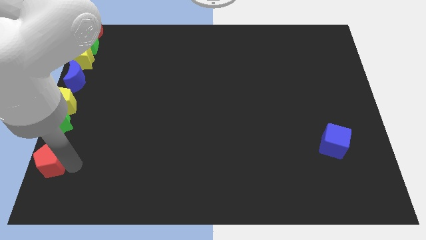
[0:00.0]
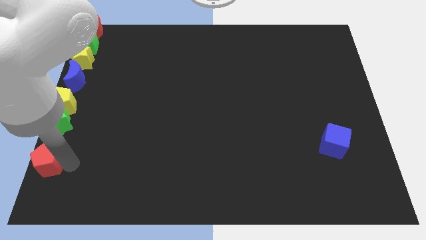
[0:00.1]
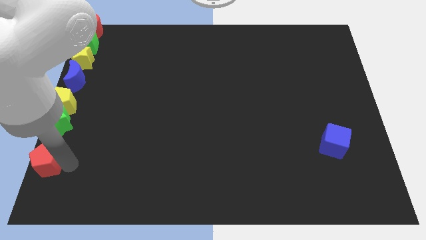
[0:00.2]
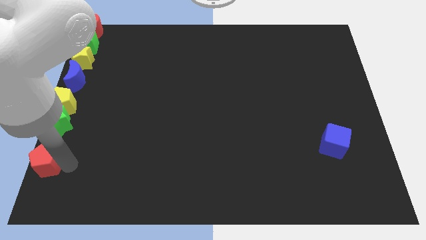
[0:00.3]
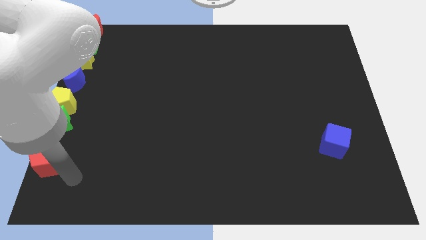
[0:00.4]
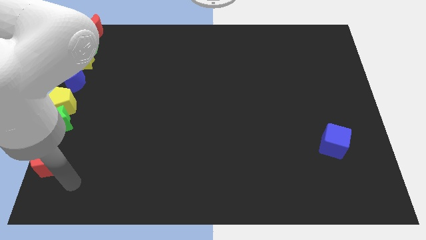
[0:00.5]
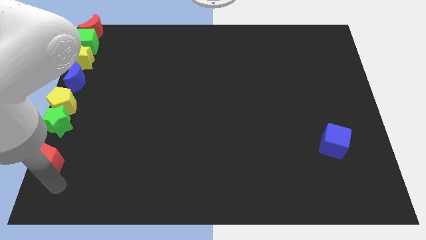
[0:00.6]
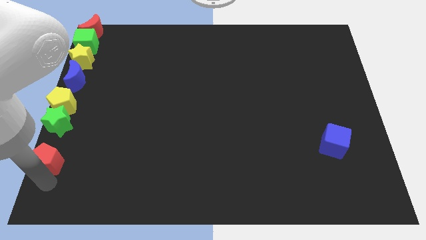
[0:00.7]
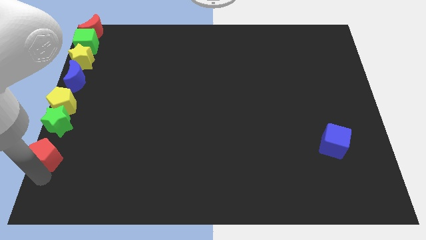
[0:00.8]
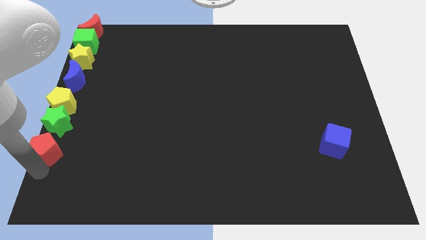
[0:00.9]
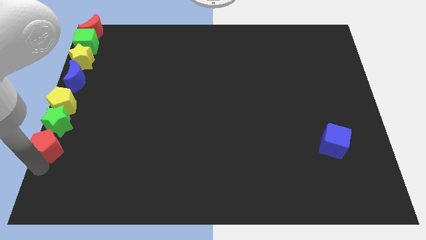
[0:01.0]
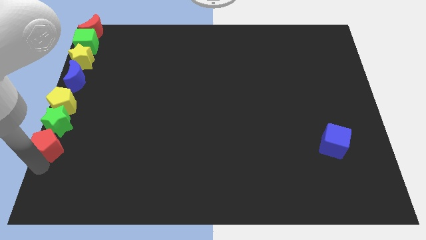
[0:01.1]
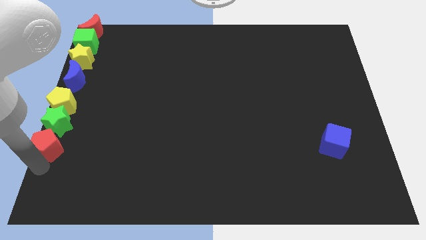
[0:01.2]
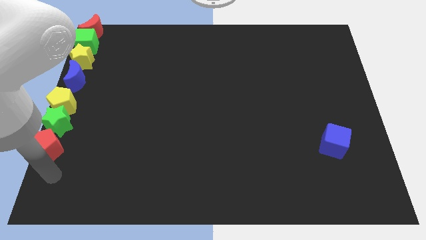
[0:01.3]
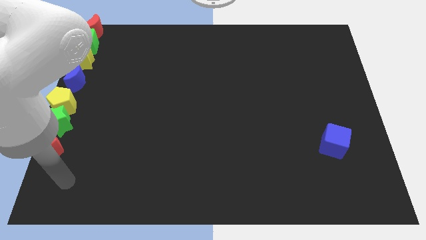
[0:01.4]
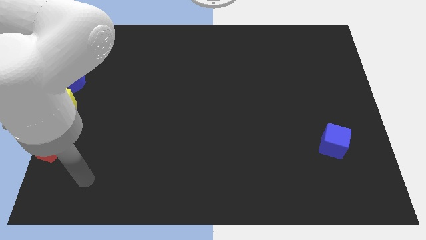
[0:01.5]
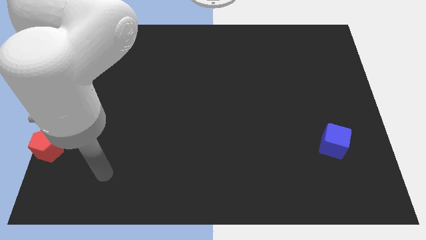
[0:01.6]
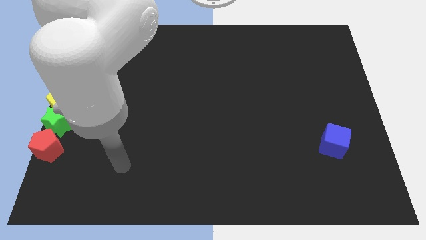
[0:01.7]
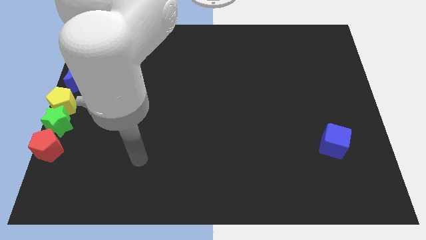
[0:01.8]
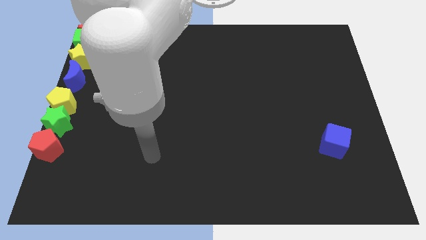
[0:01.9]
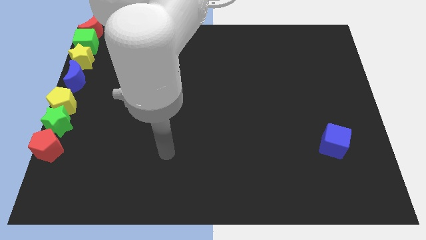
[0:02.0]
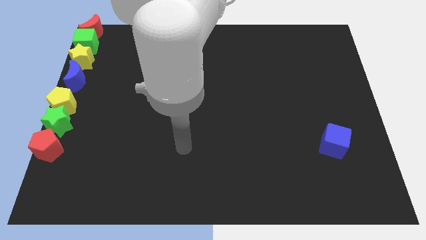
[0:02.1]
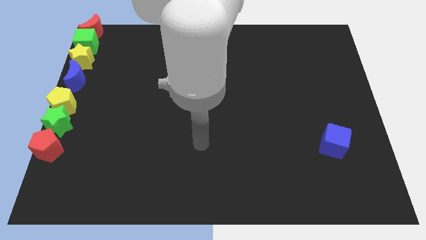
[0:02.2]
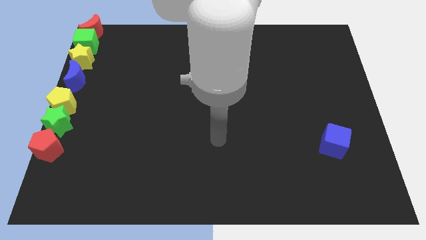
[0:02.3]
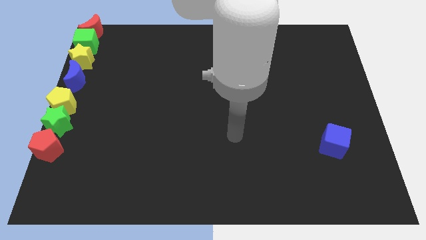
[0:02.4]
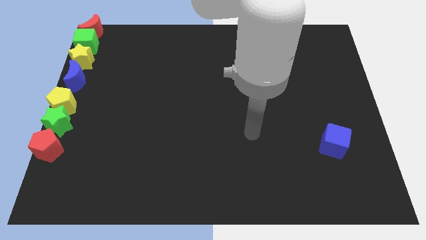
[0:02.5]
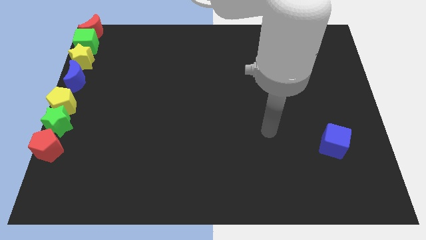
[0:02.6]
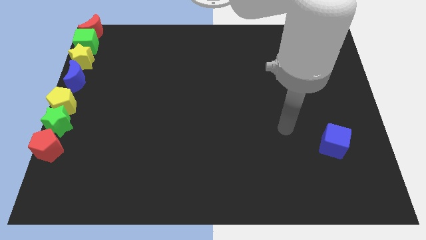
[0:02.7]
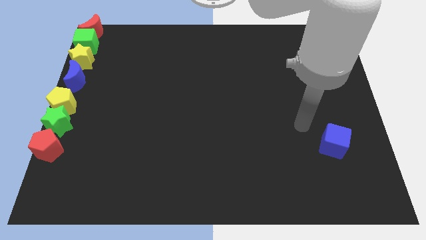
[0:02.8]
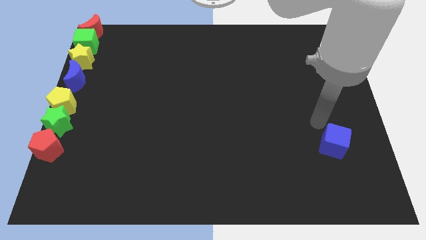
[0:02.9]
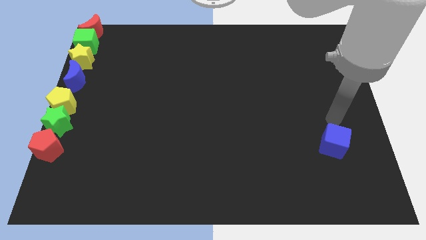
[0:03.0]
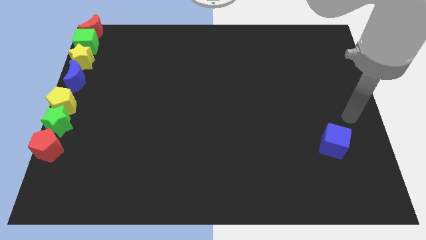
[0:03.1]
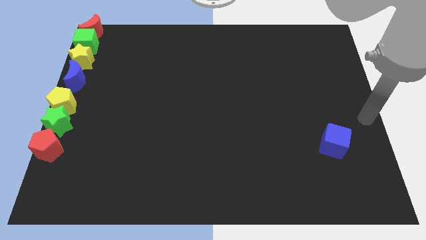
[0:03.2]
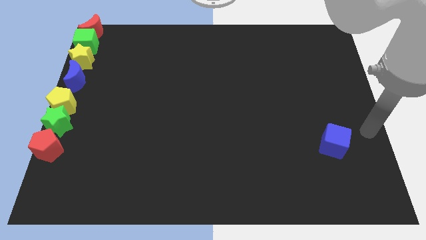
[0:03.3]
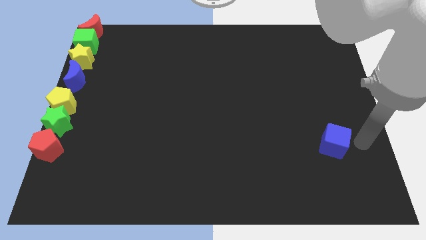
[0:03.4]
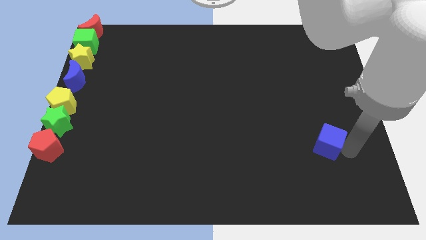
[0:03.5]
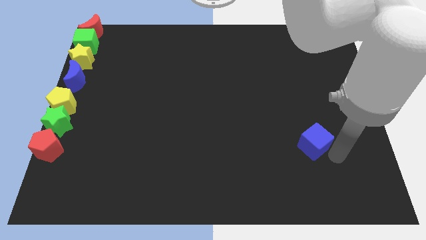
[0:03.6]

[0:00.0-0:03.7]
place the arm right to the blue cube

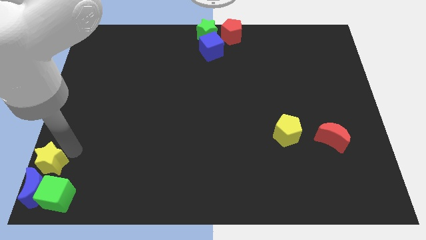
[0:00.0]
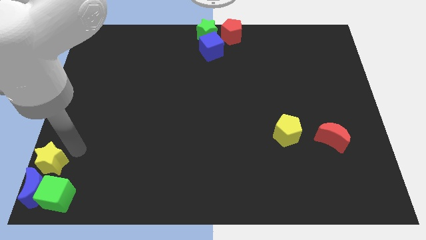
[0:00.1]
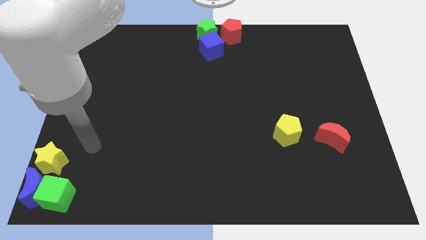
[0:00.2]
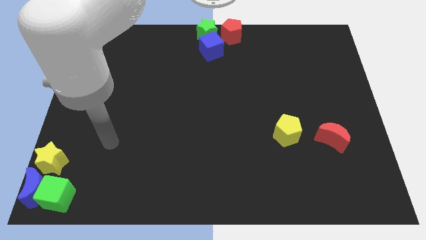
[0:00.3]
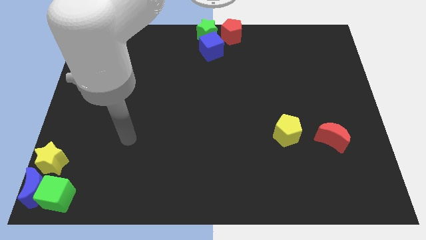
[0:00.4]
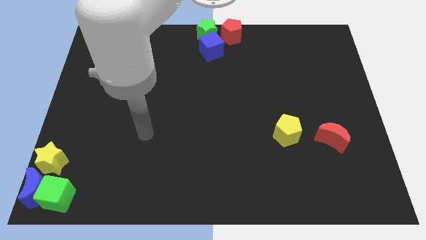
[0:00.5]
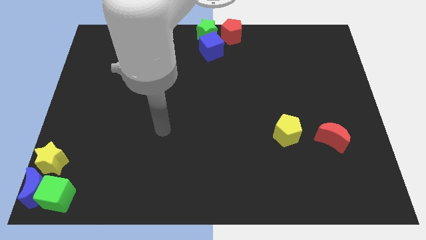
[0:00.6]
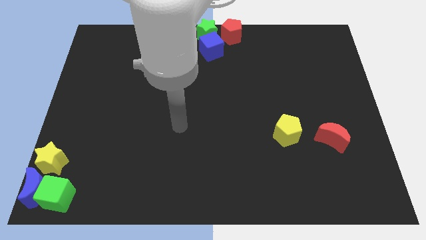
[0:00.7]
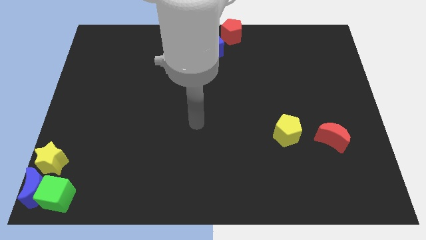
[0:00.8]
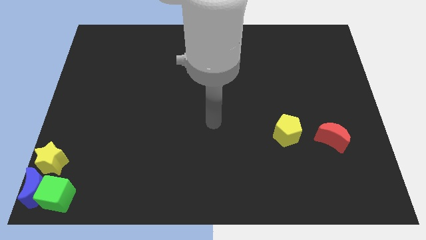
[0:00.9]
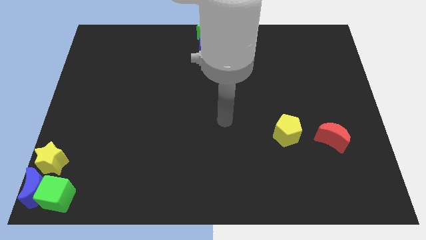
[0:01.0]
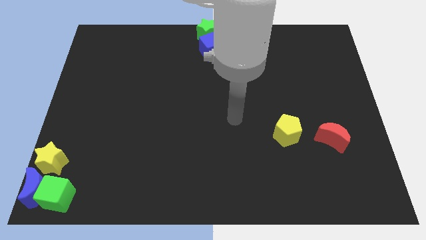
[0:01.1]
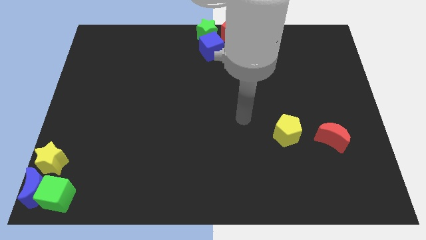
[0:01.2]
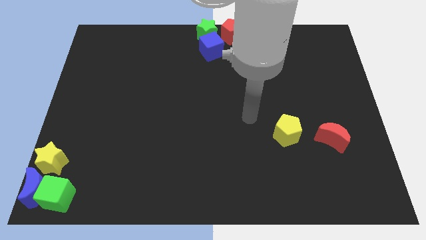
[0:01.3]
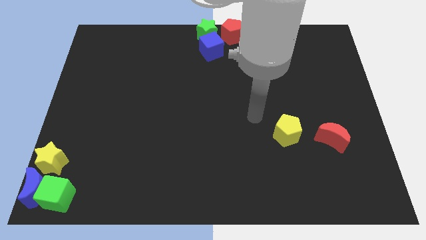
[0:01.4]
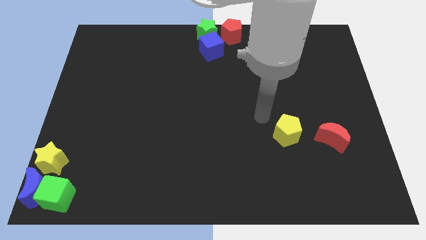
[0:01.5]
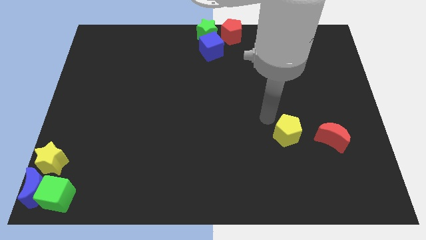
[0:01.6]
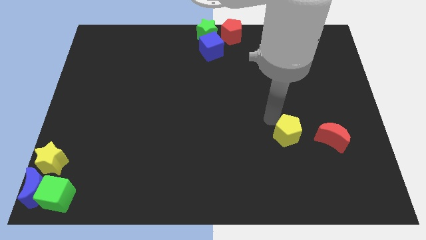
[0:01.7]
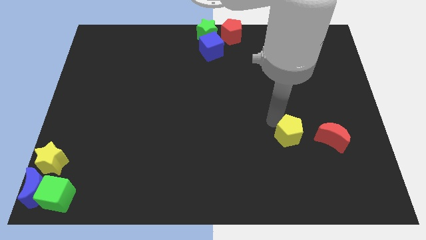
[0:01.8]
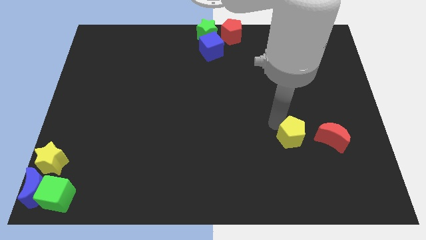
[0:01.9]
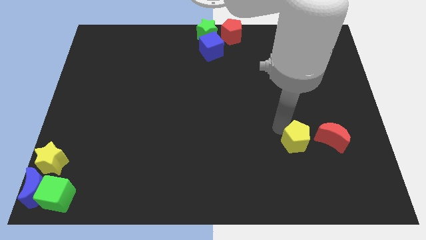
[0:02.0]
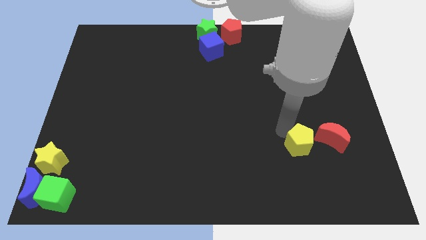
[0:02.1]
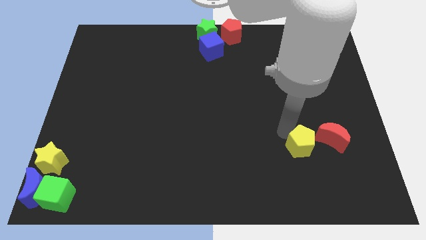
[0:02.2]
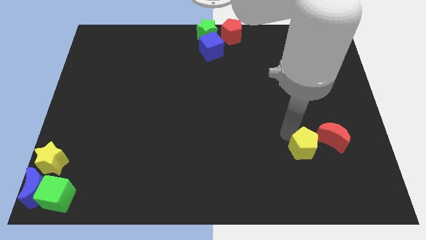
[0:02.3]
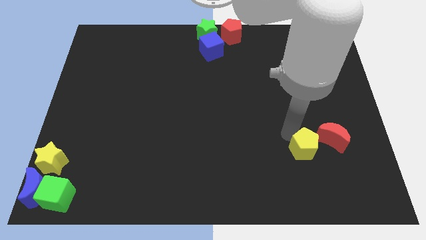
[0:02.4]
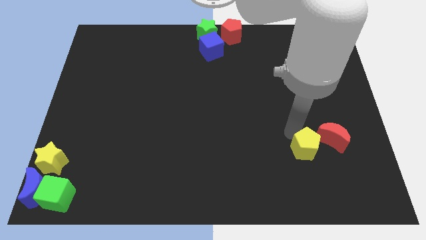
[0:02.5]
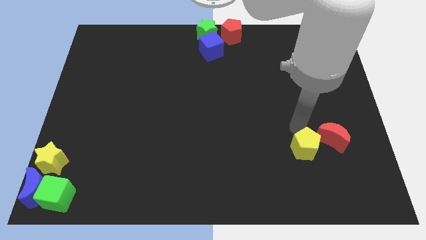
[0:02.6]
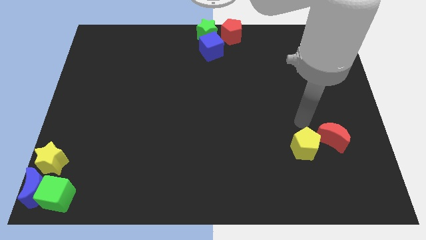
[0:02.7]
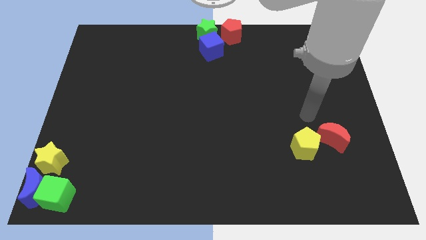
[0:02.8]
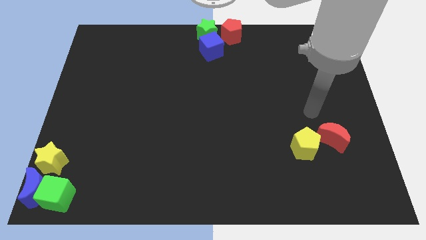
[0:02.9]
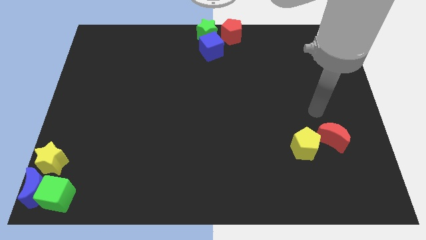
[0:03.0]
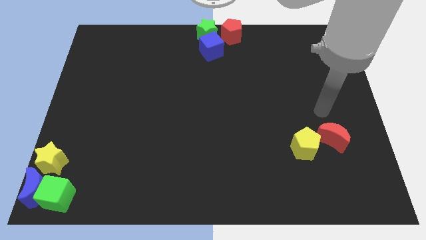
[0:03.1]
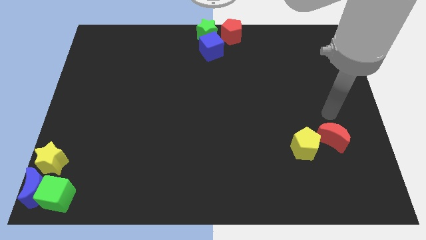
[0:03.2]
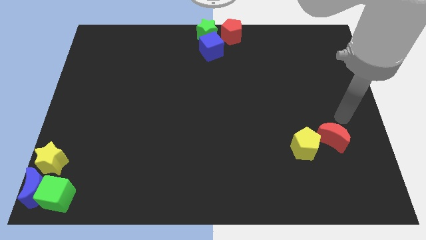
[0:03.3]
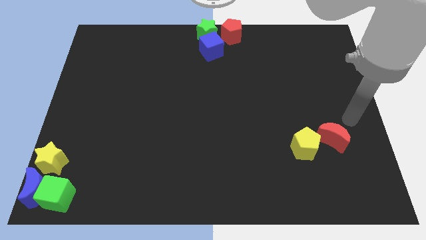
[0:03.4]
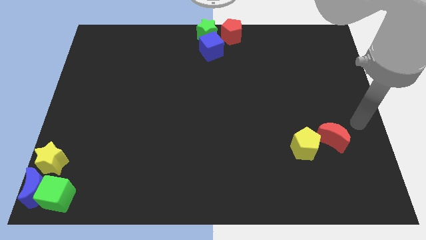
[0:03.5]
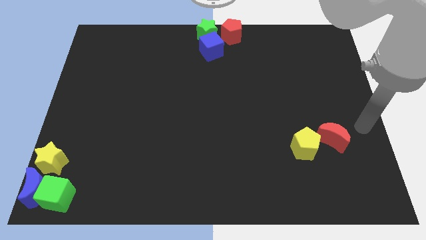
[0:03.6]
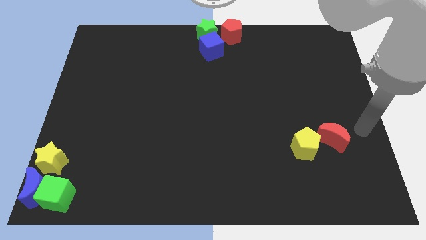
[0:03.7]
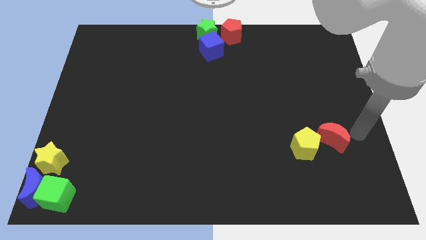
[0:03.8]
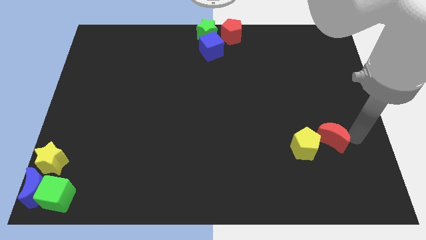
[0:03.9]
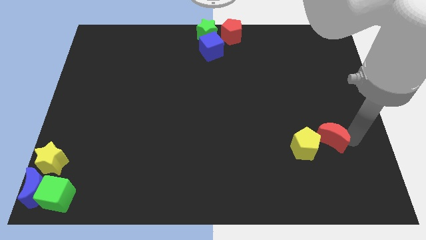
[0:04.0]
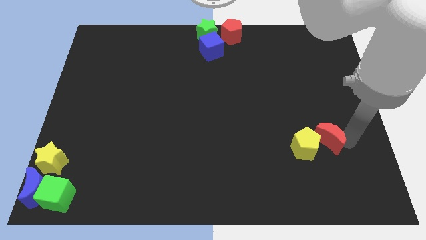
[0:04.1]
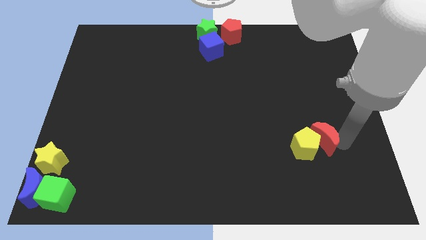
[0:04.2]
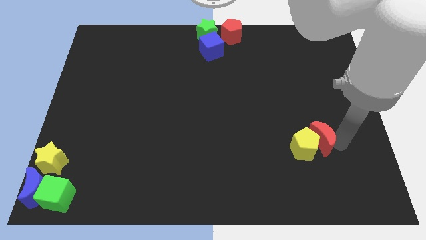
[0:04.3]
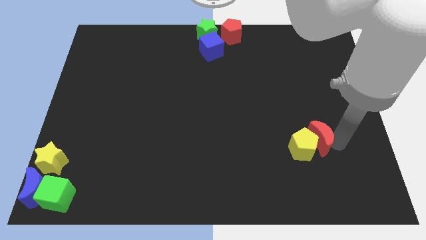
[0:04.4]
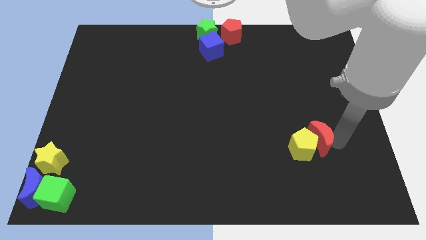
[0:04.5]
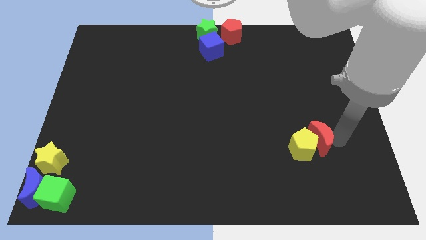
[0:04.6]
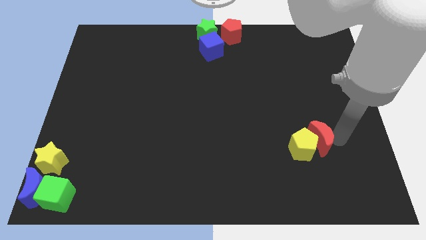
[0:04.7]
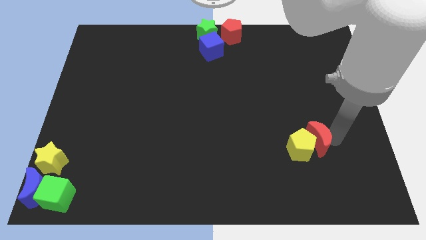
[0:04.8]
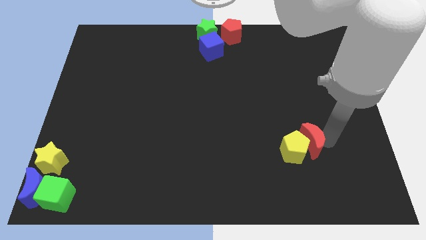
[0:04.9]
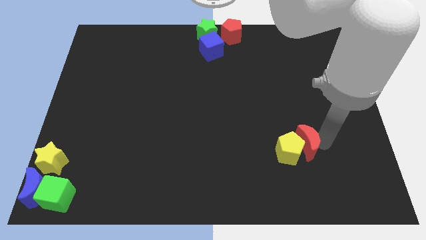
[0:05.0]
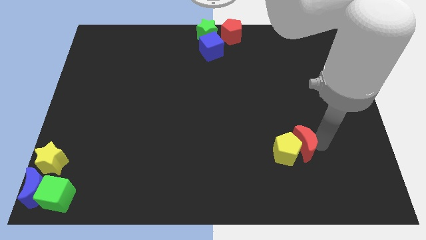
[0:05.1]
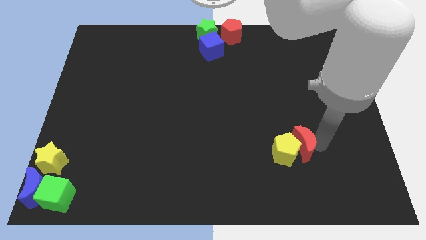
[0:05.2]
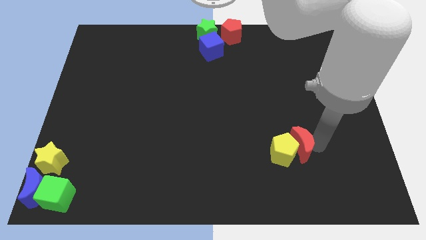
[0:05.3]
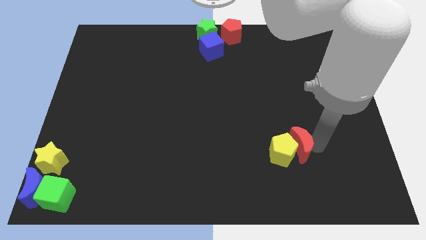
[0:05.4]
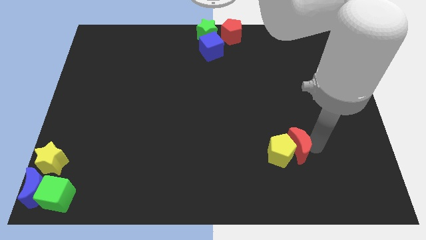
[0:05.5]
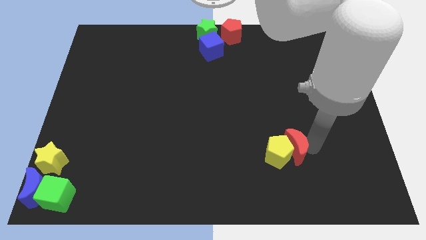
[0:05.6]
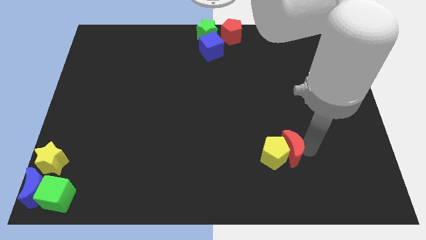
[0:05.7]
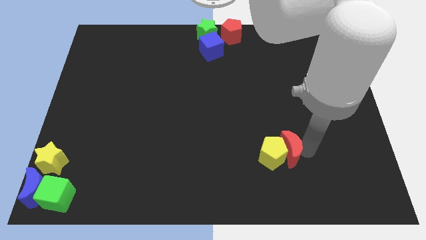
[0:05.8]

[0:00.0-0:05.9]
move the red moon and yellow pentagon to the bottom center of the board
